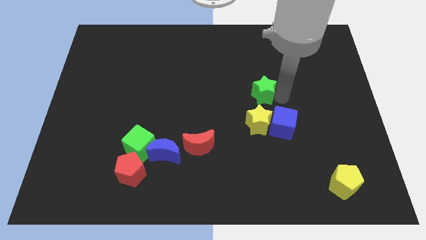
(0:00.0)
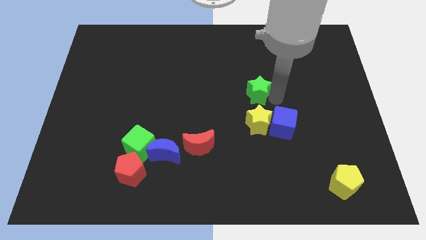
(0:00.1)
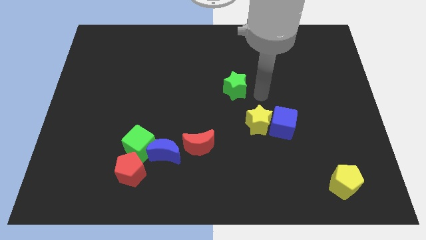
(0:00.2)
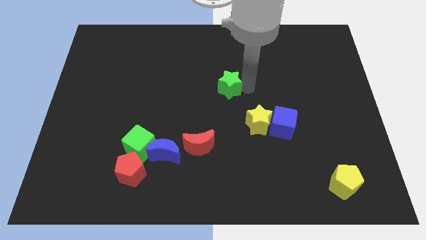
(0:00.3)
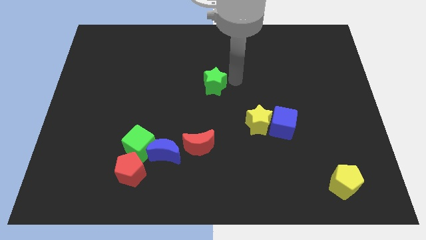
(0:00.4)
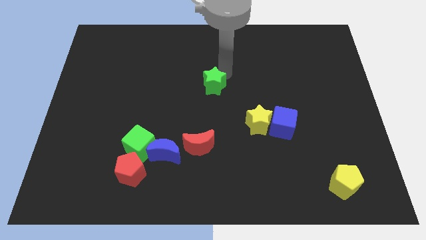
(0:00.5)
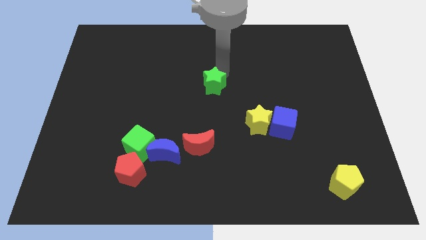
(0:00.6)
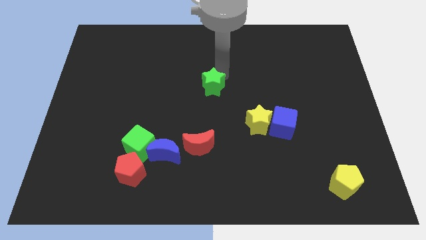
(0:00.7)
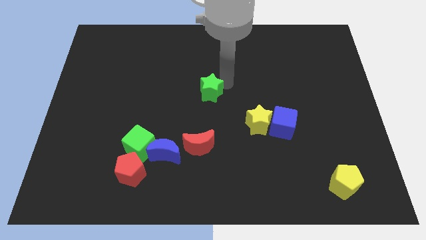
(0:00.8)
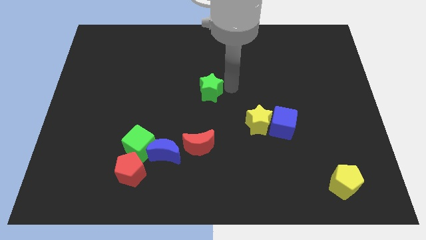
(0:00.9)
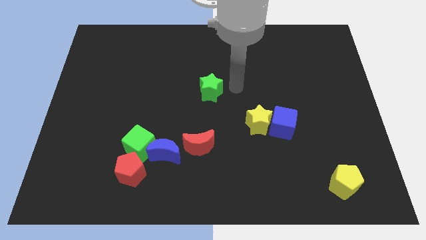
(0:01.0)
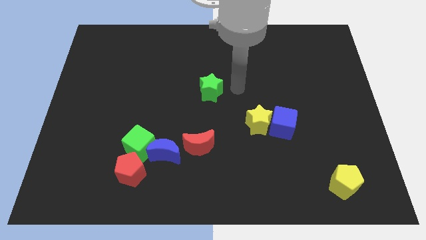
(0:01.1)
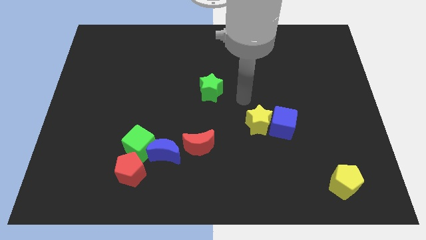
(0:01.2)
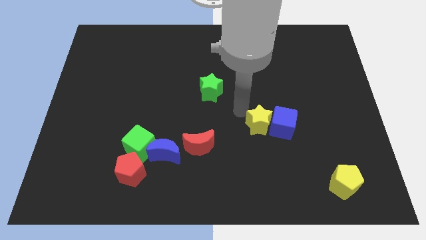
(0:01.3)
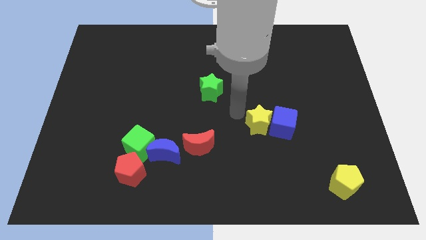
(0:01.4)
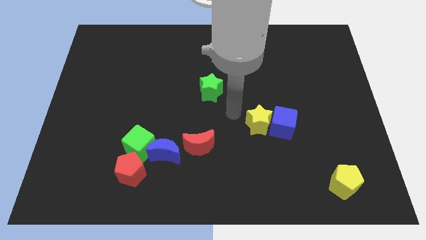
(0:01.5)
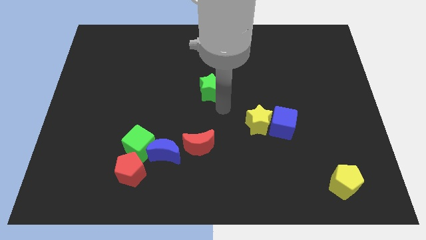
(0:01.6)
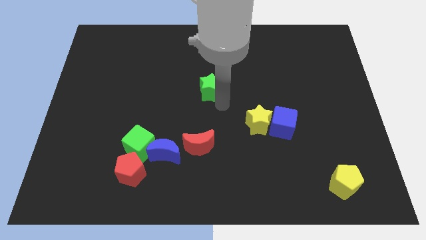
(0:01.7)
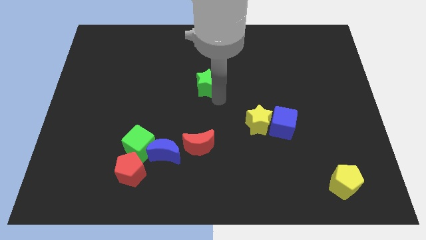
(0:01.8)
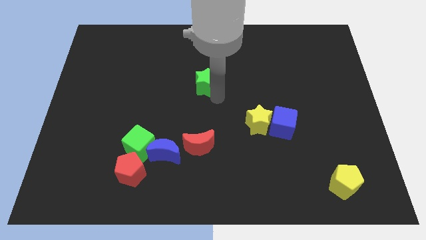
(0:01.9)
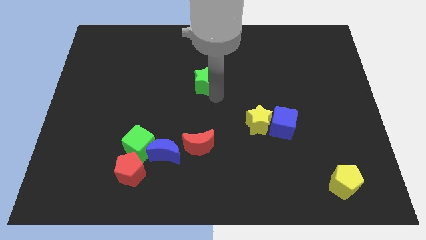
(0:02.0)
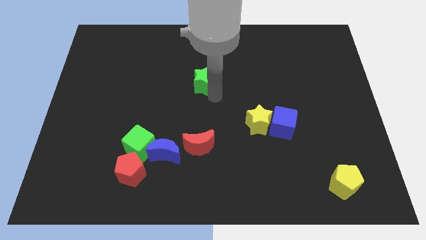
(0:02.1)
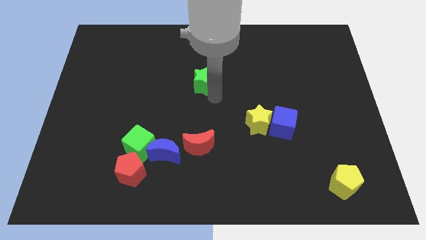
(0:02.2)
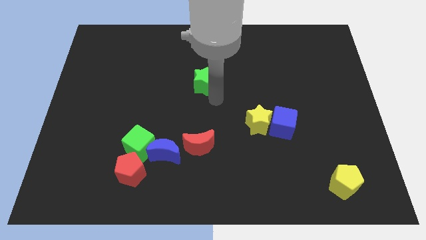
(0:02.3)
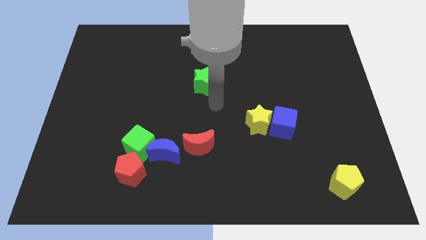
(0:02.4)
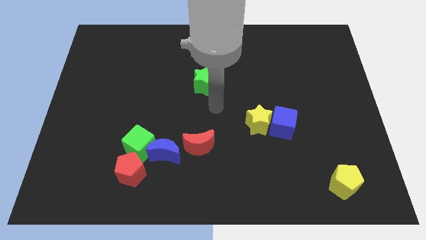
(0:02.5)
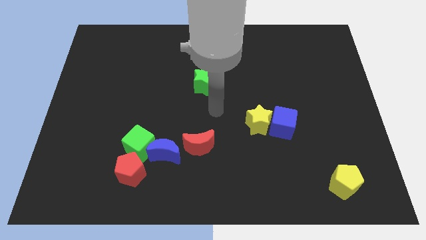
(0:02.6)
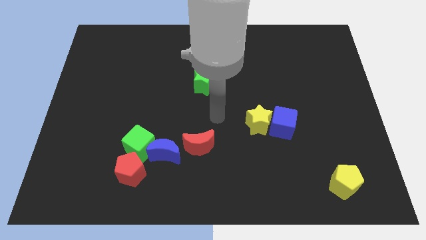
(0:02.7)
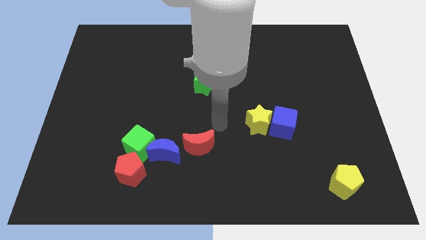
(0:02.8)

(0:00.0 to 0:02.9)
move the green star to the top of the red crescent

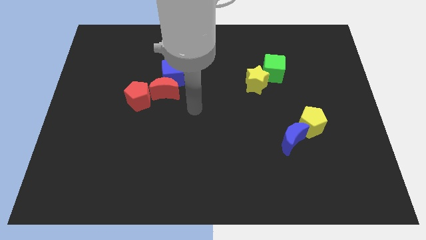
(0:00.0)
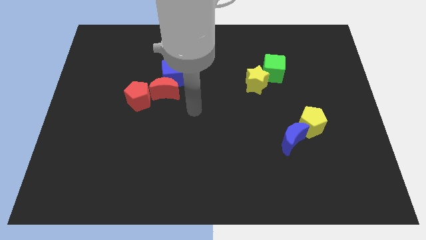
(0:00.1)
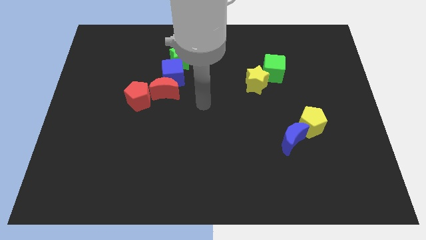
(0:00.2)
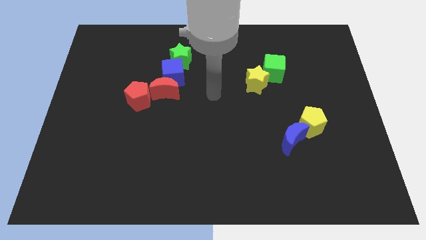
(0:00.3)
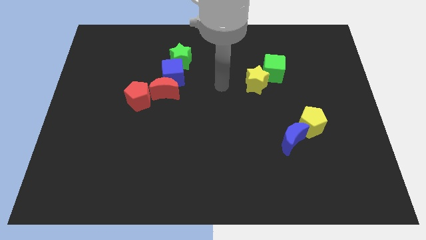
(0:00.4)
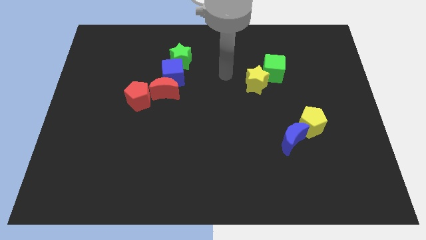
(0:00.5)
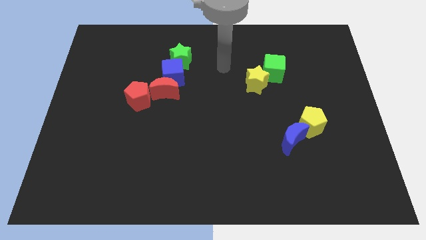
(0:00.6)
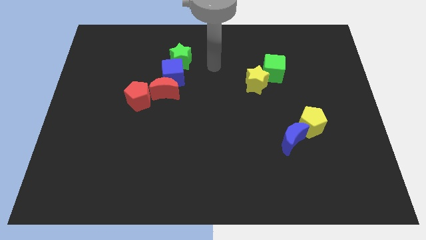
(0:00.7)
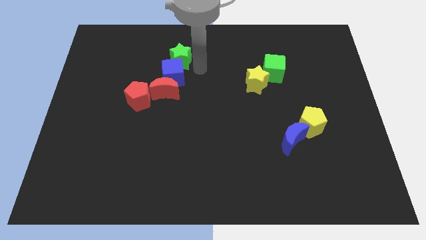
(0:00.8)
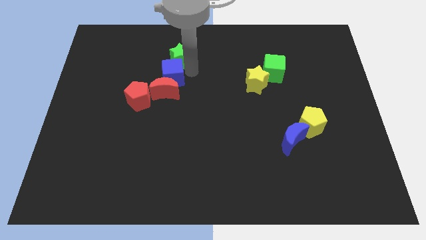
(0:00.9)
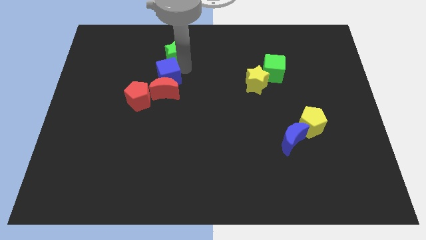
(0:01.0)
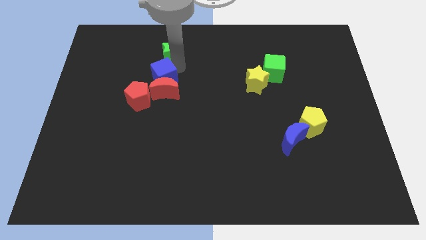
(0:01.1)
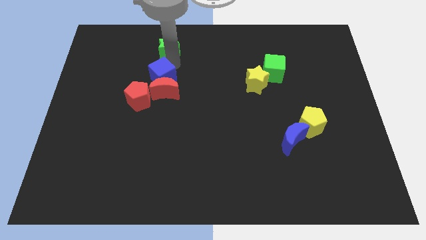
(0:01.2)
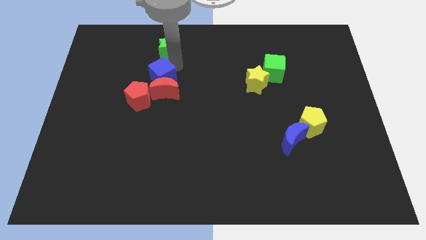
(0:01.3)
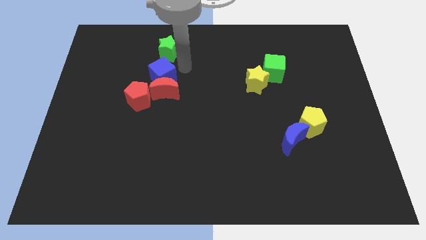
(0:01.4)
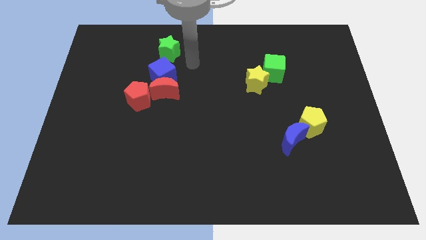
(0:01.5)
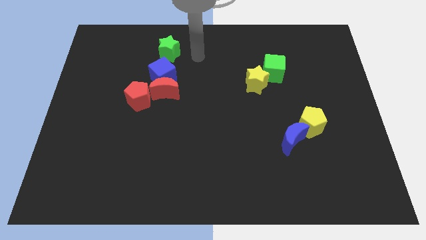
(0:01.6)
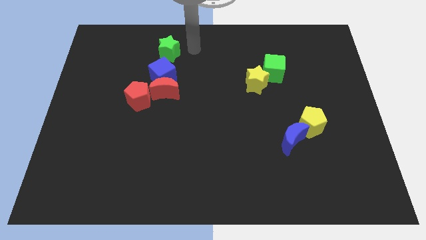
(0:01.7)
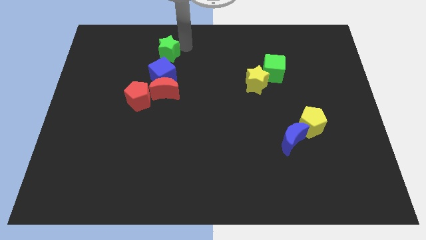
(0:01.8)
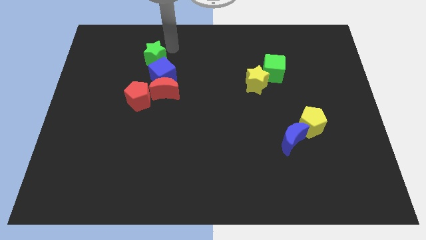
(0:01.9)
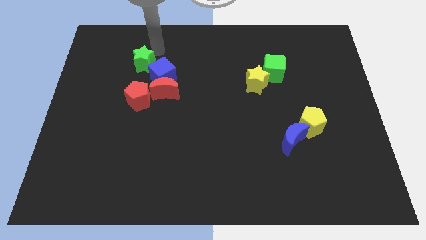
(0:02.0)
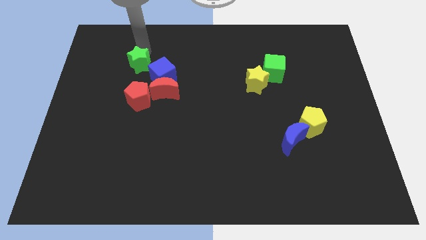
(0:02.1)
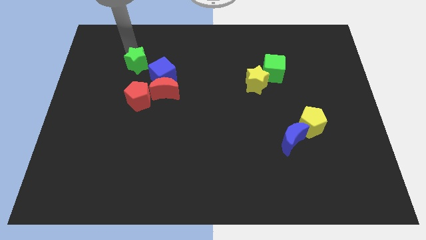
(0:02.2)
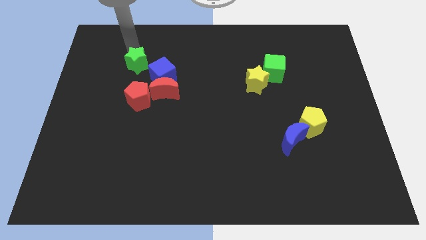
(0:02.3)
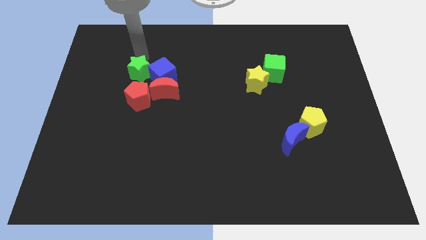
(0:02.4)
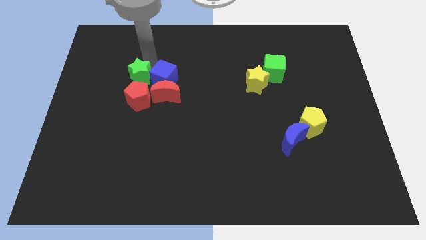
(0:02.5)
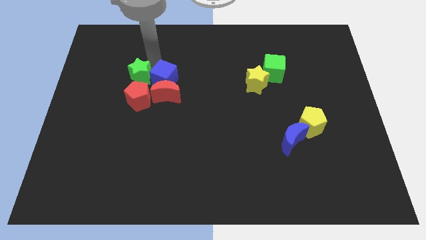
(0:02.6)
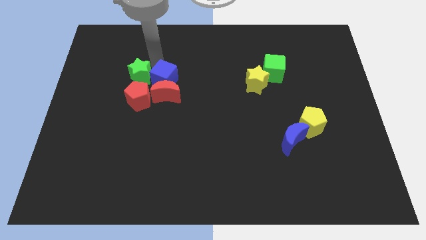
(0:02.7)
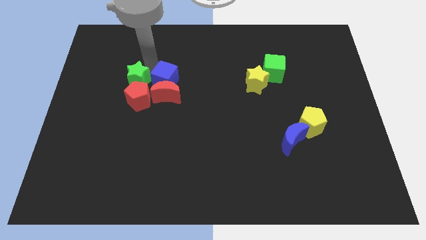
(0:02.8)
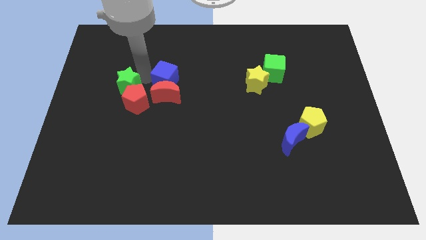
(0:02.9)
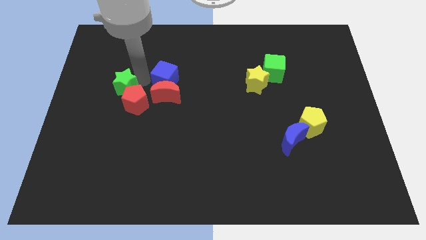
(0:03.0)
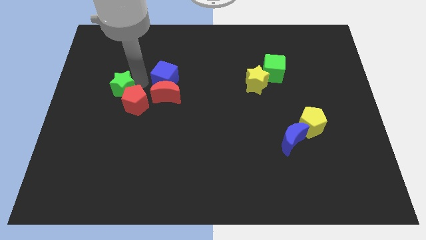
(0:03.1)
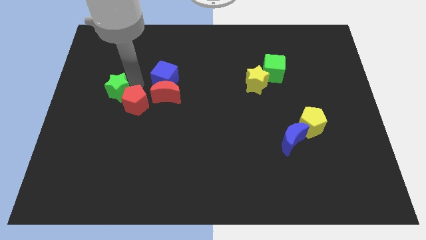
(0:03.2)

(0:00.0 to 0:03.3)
separate the green star and the blue cube

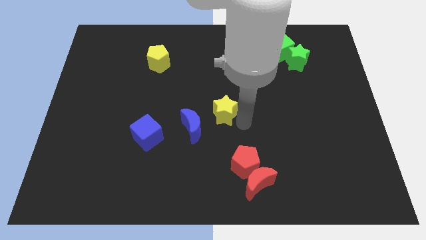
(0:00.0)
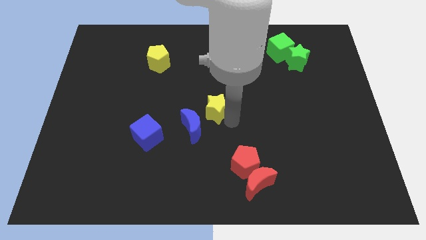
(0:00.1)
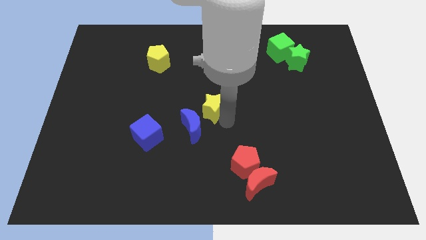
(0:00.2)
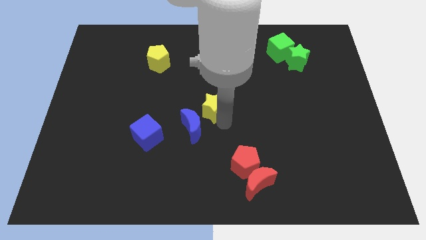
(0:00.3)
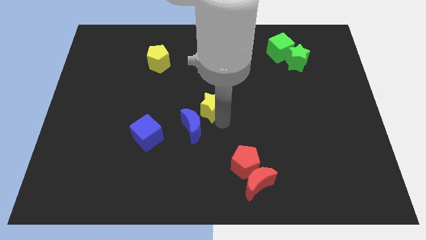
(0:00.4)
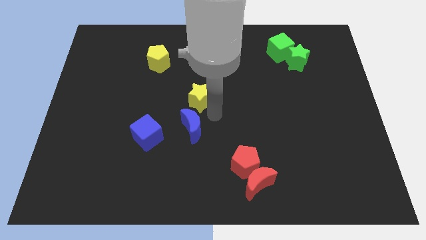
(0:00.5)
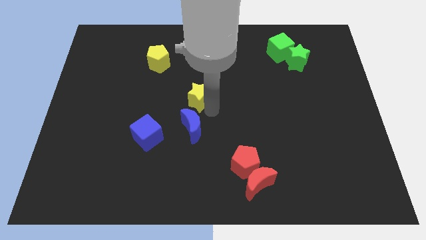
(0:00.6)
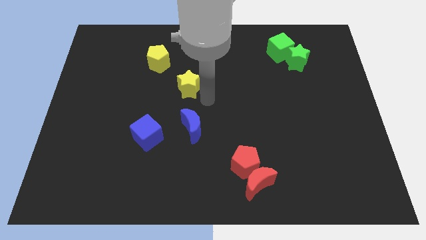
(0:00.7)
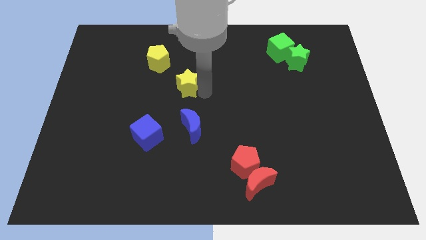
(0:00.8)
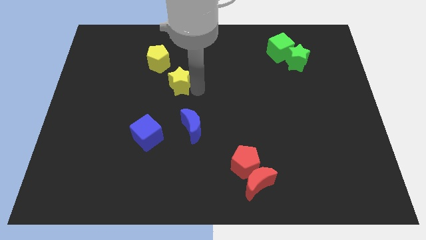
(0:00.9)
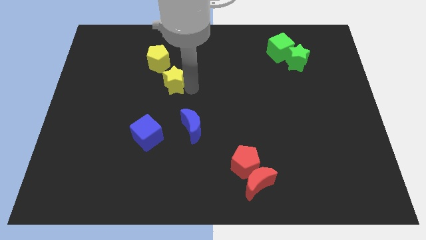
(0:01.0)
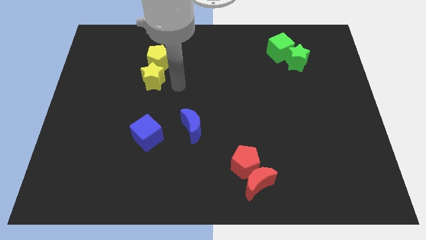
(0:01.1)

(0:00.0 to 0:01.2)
place the yellow star vertically below the yellow pentagon

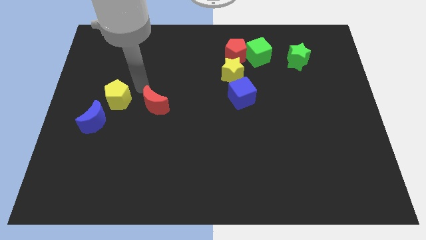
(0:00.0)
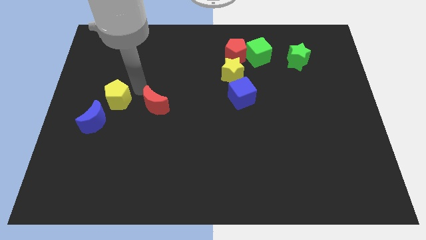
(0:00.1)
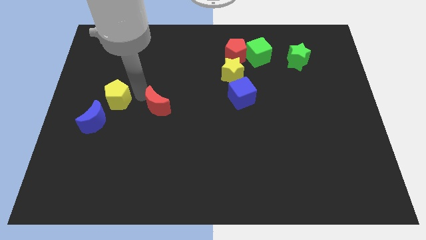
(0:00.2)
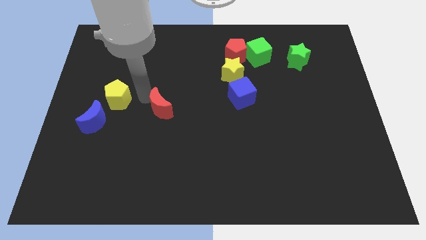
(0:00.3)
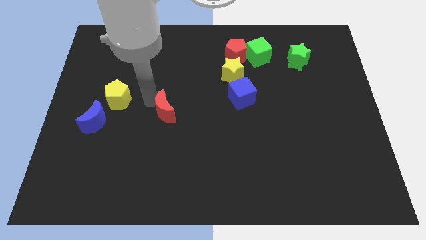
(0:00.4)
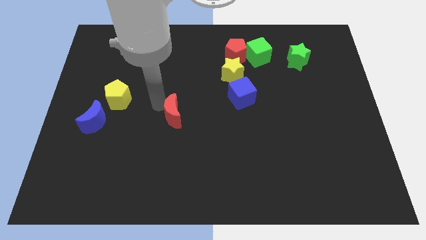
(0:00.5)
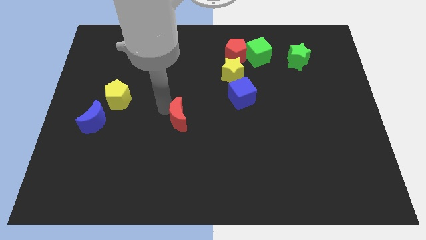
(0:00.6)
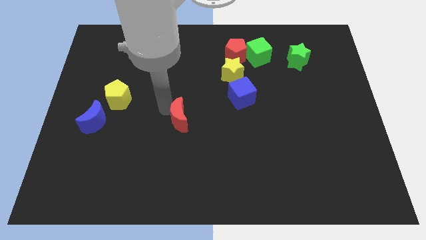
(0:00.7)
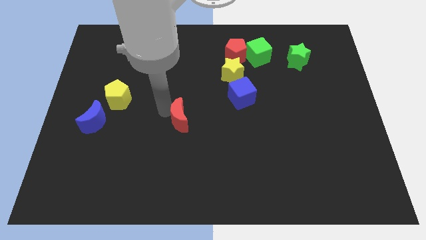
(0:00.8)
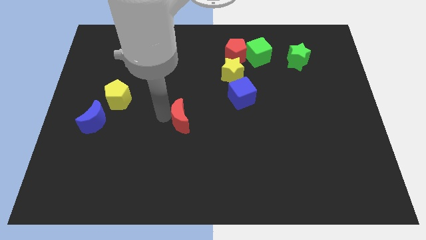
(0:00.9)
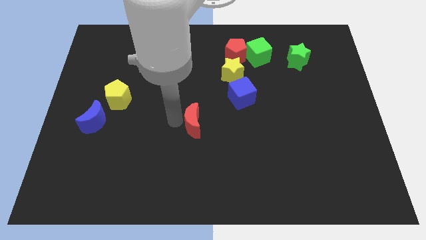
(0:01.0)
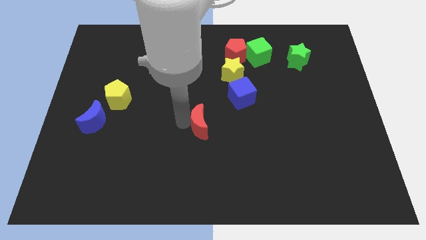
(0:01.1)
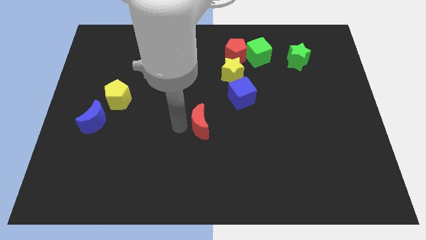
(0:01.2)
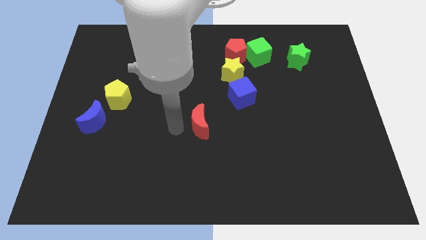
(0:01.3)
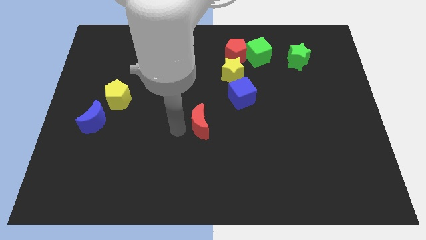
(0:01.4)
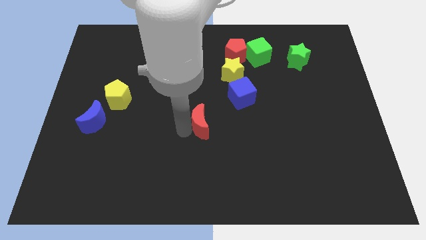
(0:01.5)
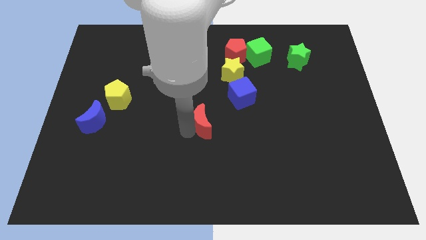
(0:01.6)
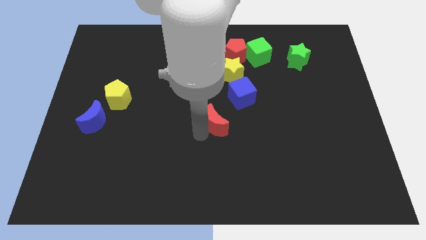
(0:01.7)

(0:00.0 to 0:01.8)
push the red crescent to the bottom left of the blue cube
